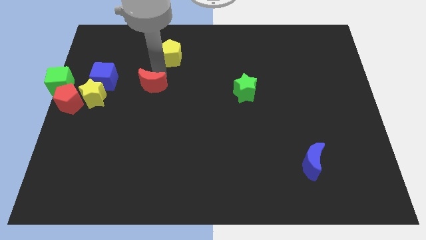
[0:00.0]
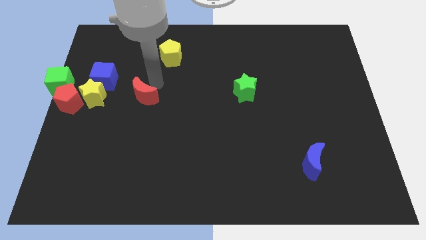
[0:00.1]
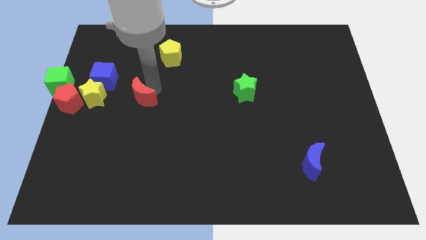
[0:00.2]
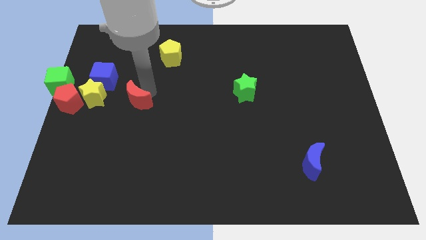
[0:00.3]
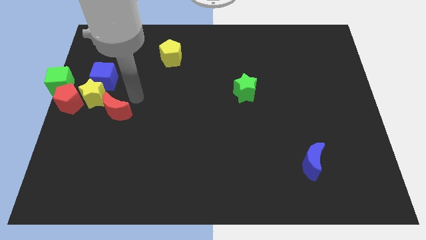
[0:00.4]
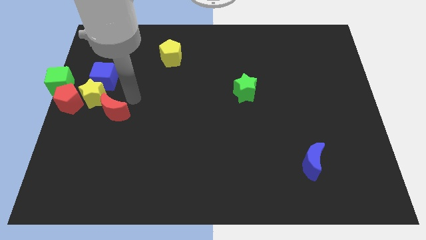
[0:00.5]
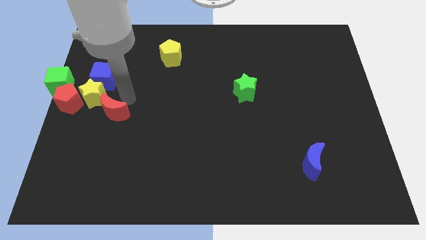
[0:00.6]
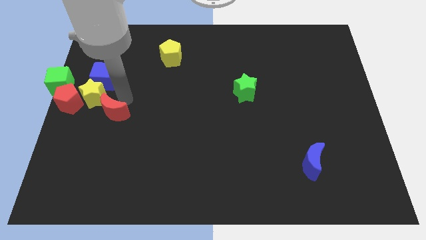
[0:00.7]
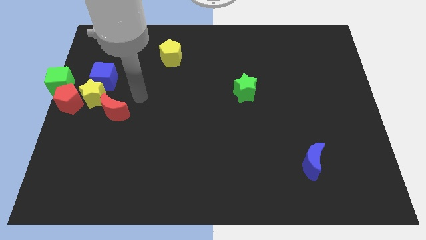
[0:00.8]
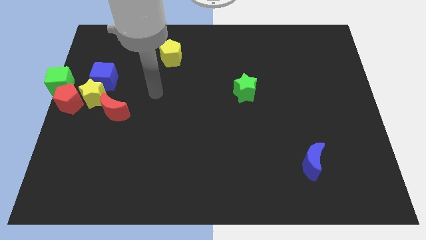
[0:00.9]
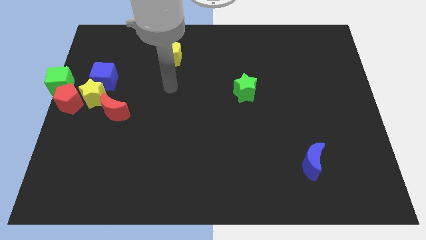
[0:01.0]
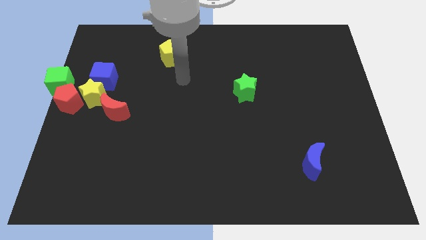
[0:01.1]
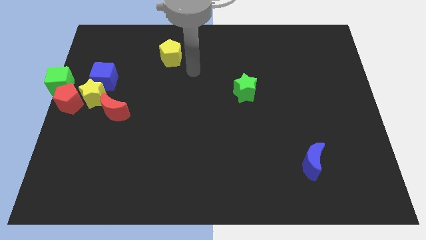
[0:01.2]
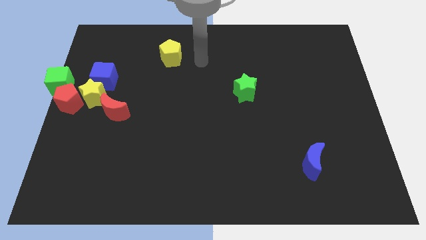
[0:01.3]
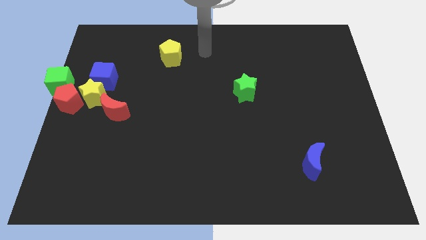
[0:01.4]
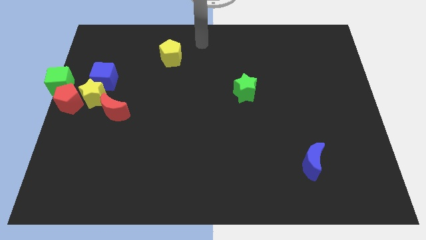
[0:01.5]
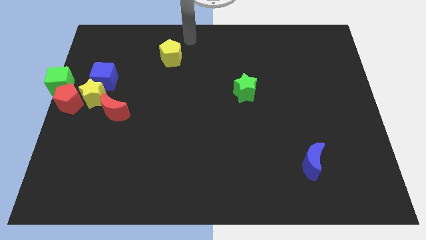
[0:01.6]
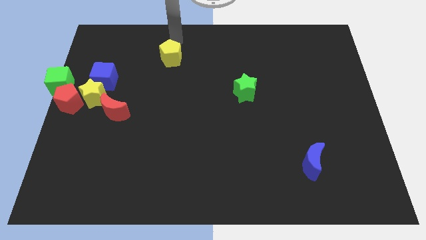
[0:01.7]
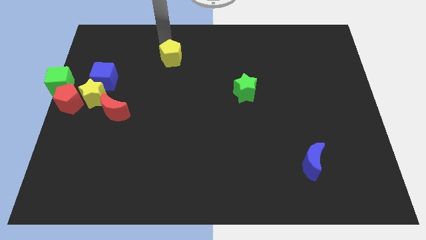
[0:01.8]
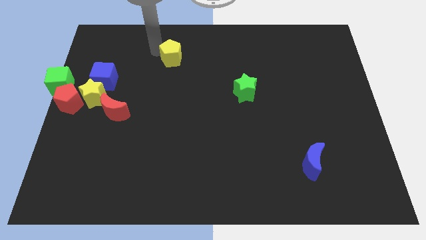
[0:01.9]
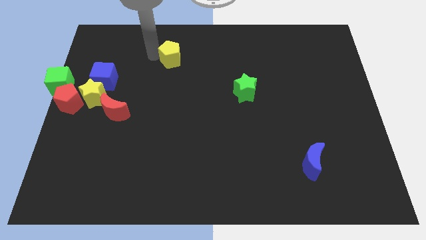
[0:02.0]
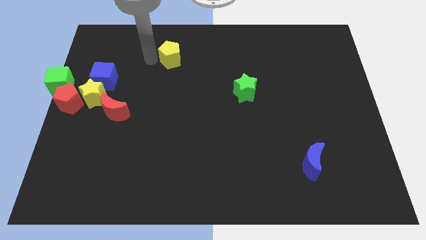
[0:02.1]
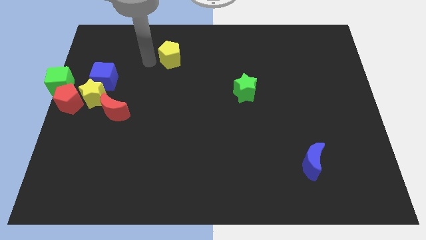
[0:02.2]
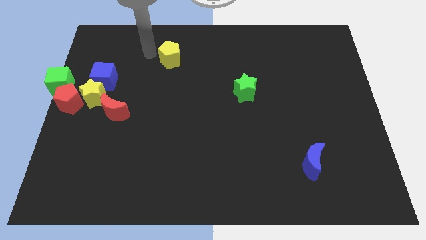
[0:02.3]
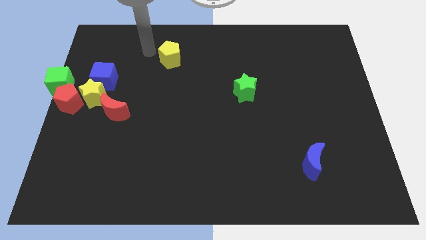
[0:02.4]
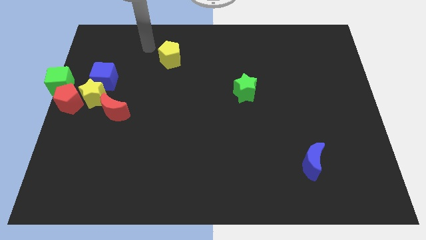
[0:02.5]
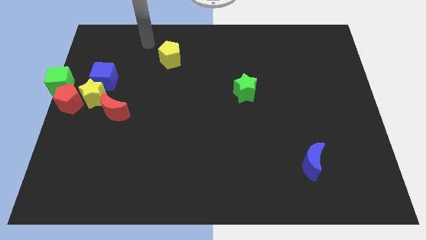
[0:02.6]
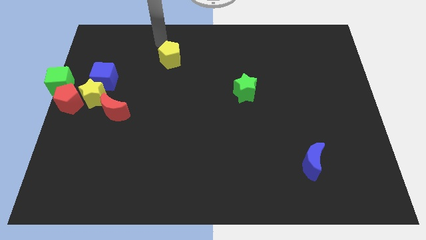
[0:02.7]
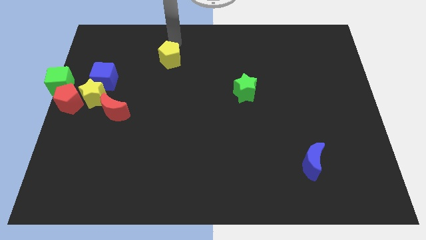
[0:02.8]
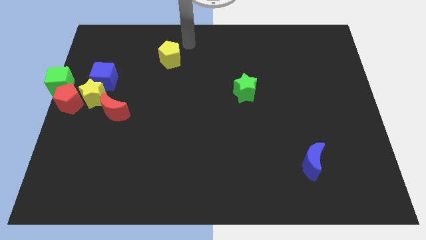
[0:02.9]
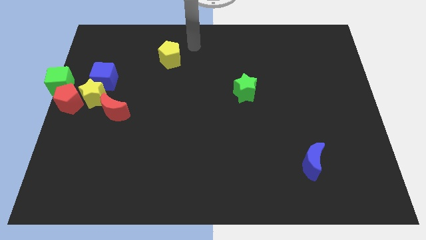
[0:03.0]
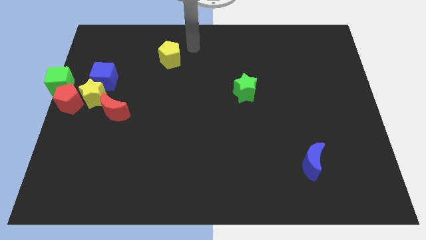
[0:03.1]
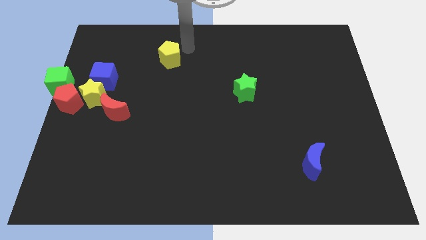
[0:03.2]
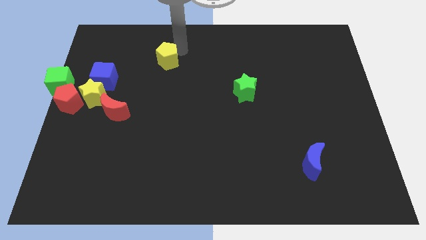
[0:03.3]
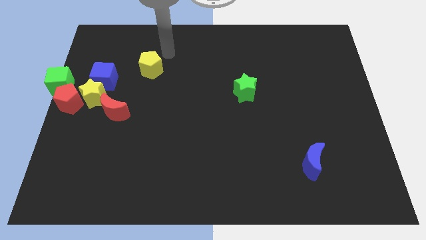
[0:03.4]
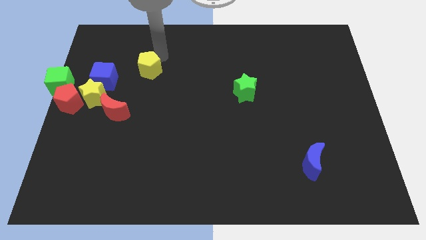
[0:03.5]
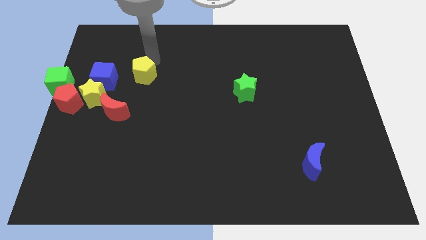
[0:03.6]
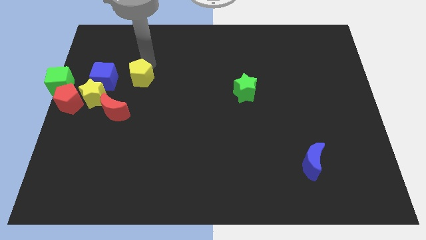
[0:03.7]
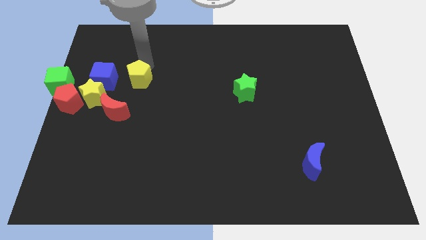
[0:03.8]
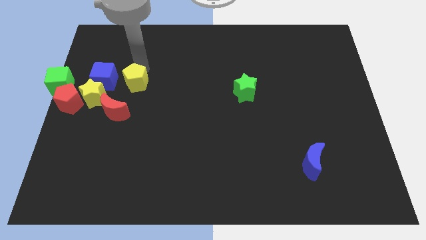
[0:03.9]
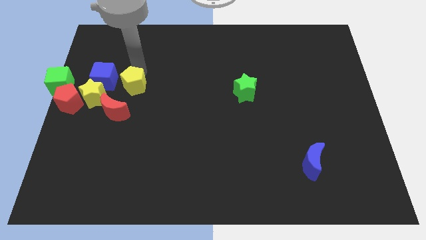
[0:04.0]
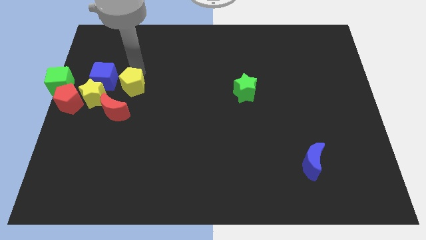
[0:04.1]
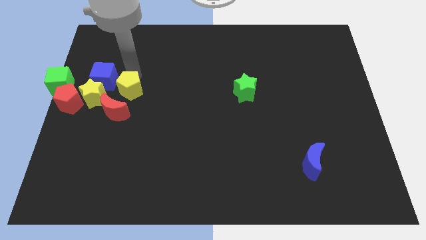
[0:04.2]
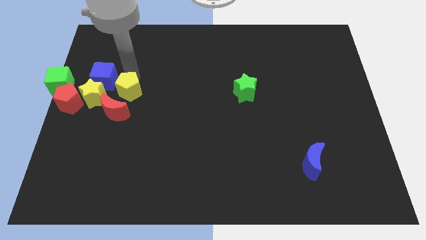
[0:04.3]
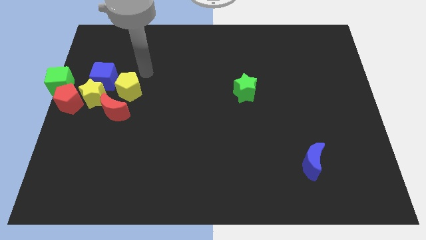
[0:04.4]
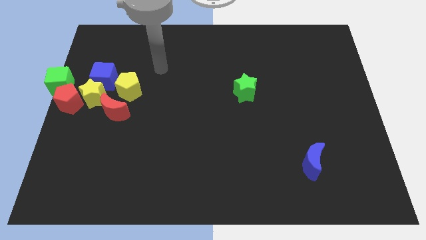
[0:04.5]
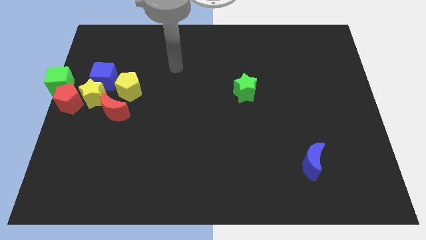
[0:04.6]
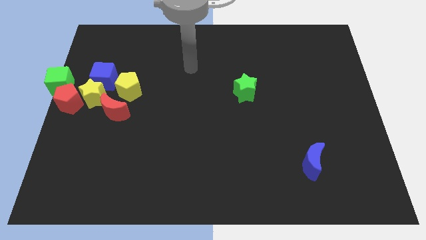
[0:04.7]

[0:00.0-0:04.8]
move the red moon and the yellow pentagon towards the group of blocks

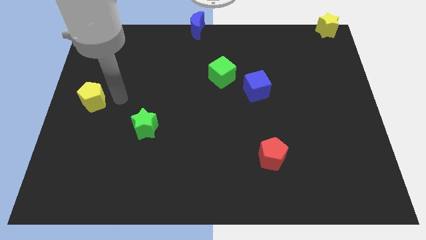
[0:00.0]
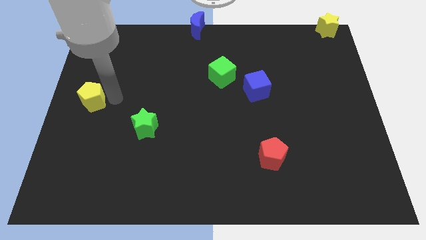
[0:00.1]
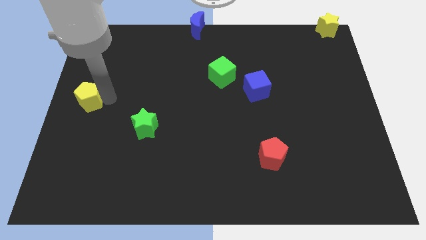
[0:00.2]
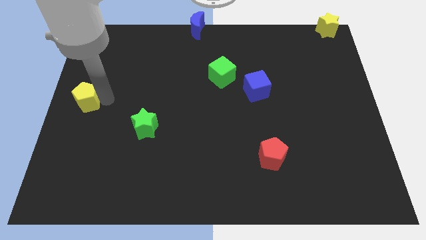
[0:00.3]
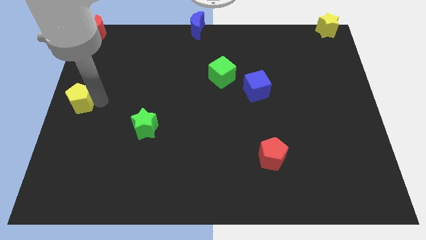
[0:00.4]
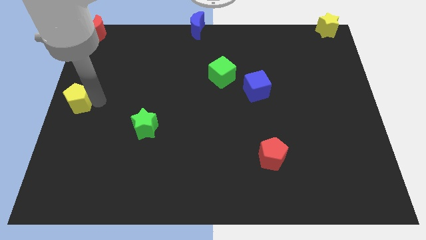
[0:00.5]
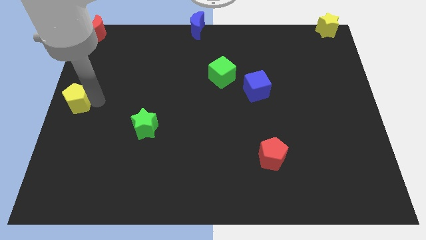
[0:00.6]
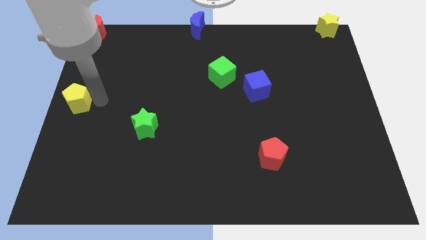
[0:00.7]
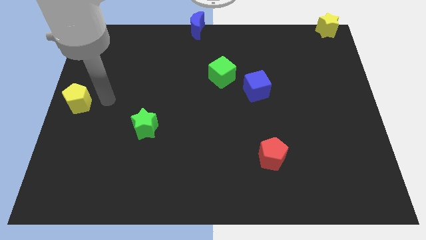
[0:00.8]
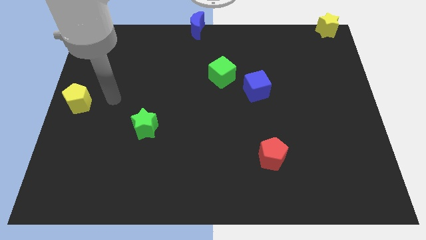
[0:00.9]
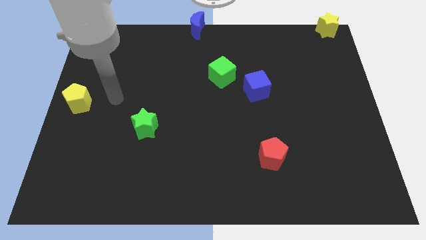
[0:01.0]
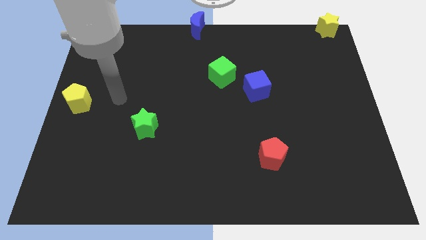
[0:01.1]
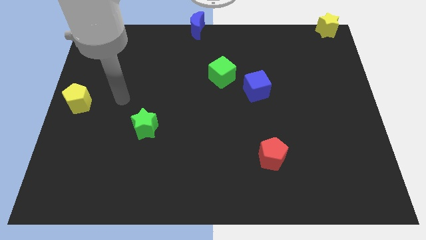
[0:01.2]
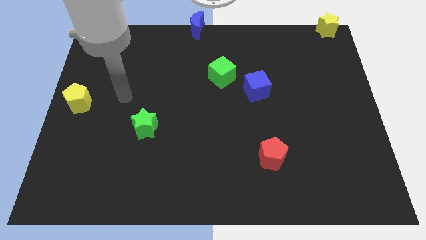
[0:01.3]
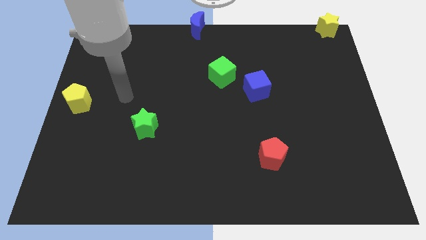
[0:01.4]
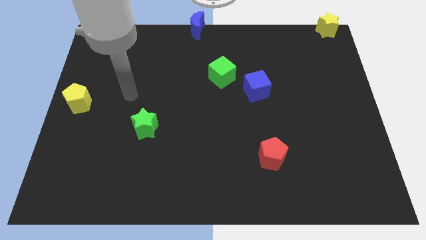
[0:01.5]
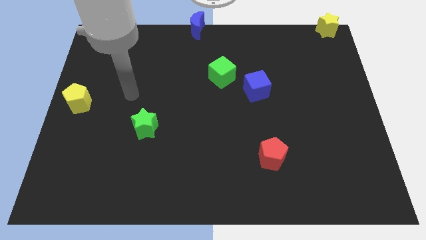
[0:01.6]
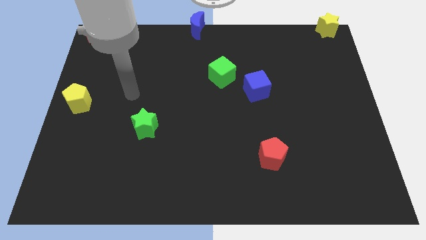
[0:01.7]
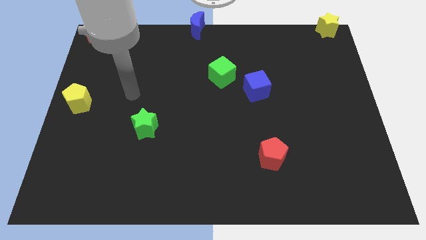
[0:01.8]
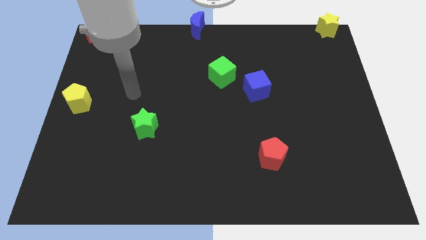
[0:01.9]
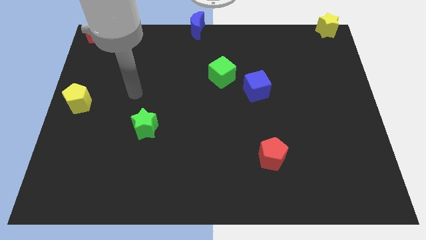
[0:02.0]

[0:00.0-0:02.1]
move yellow pentagon to the center left

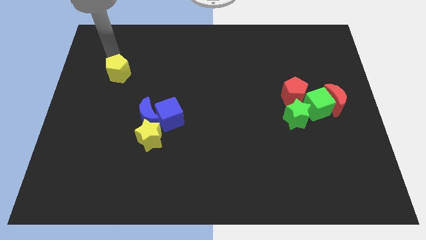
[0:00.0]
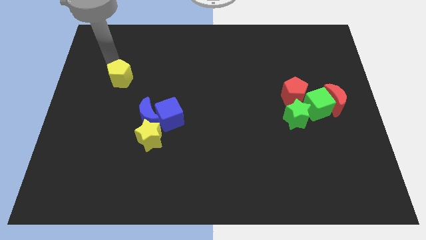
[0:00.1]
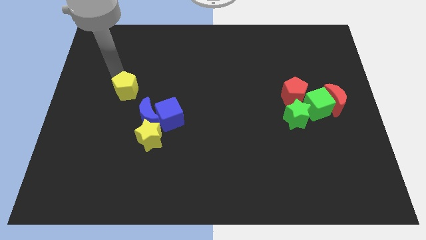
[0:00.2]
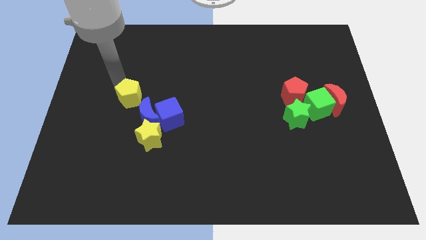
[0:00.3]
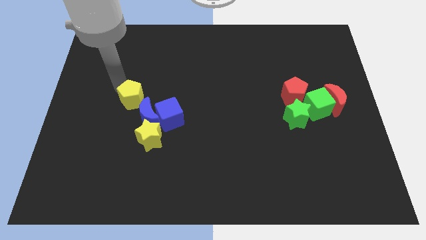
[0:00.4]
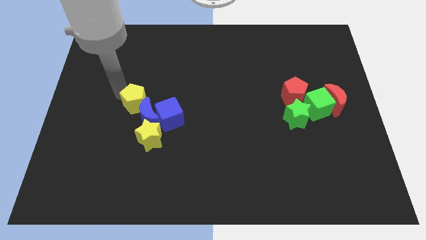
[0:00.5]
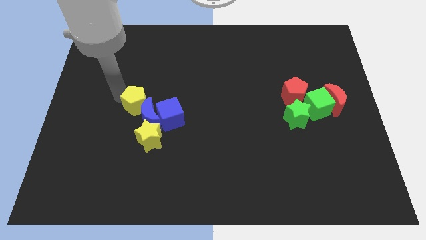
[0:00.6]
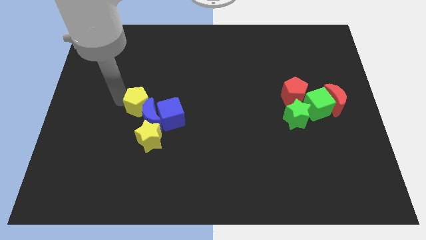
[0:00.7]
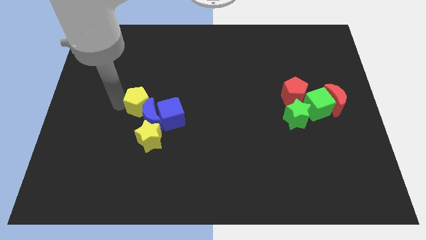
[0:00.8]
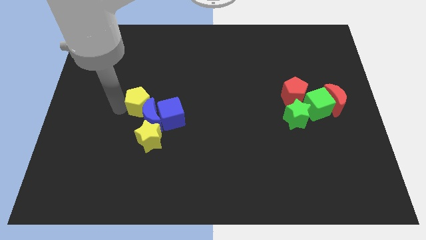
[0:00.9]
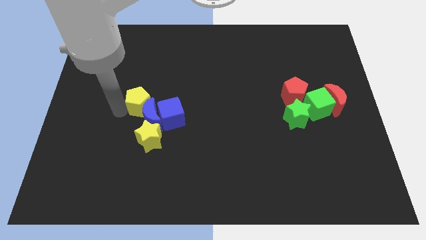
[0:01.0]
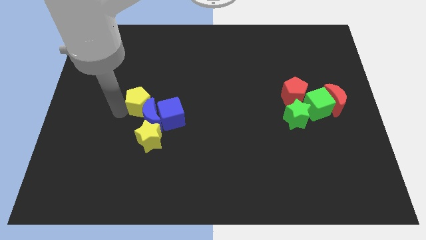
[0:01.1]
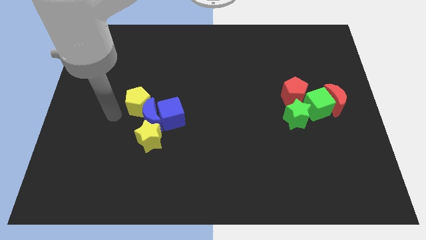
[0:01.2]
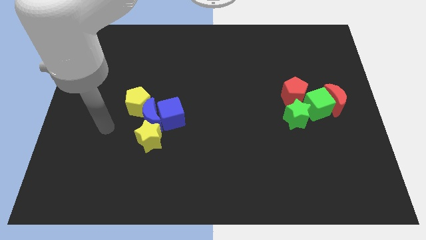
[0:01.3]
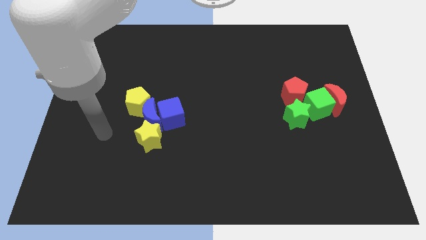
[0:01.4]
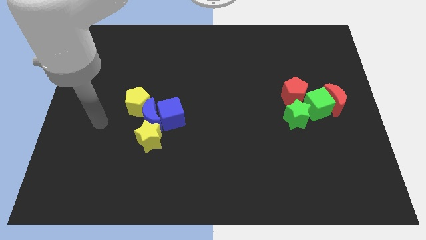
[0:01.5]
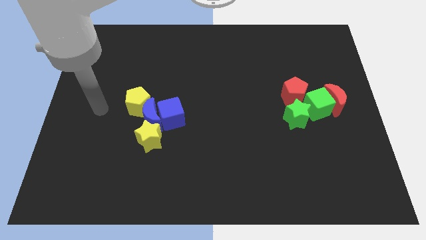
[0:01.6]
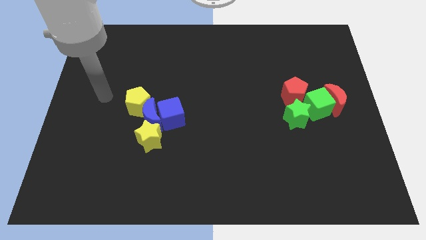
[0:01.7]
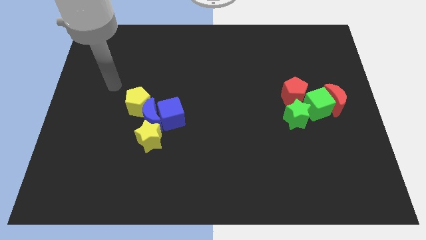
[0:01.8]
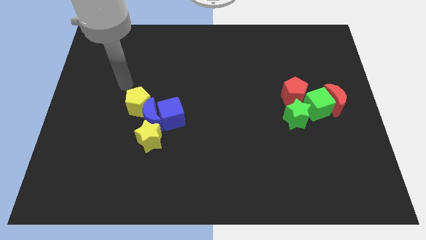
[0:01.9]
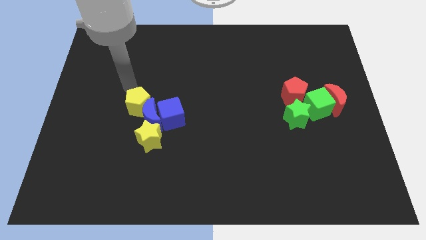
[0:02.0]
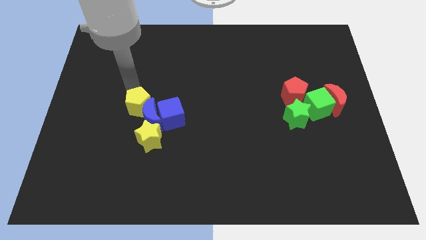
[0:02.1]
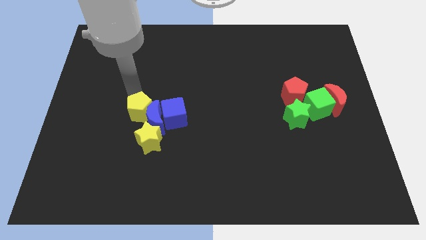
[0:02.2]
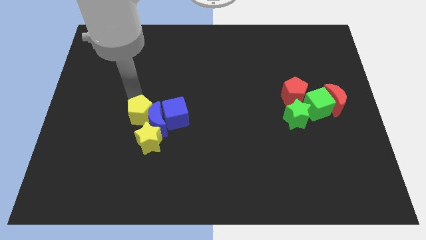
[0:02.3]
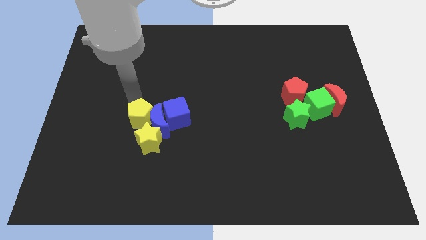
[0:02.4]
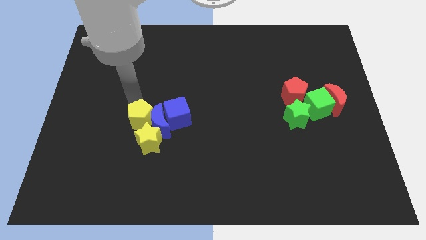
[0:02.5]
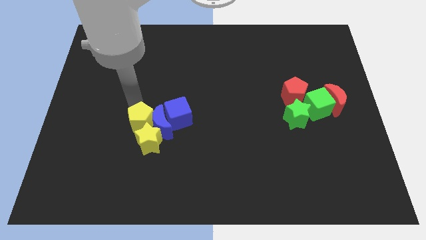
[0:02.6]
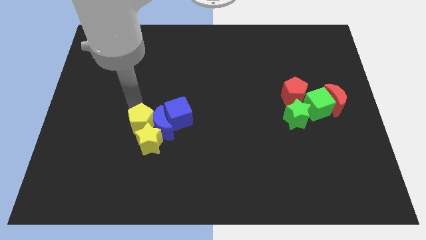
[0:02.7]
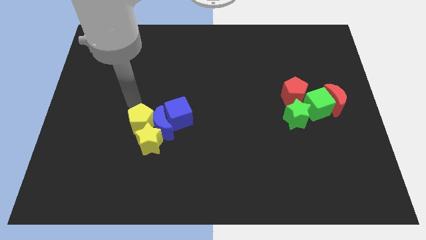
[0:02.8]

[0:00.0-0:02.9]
place yellow pentagon above yellow star
